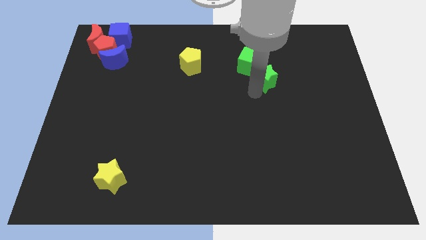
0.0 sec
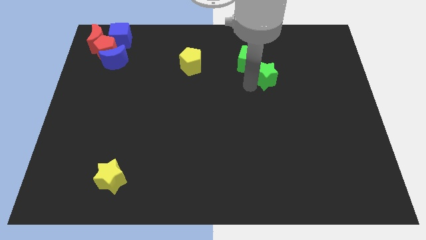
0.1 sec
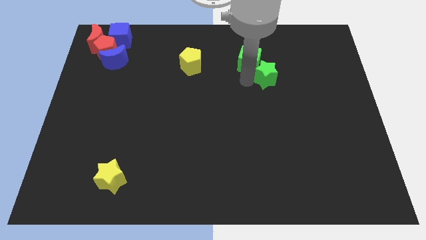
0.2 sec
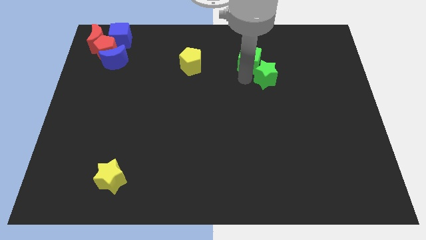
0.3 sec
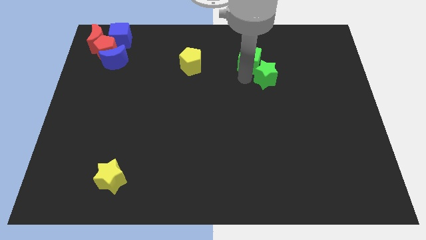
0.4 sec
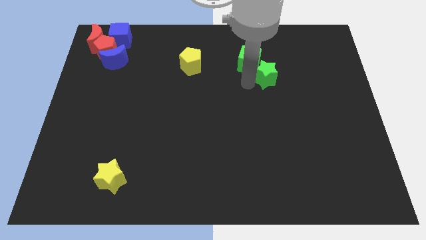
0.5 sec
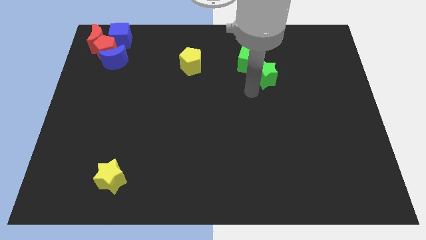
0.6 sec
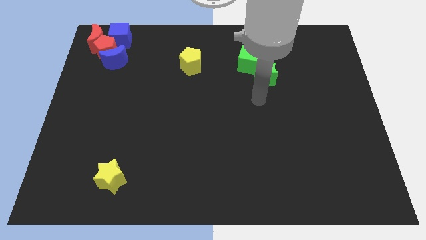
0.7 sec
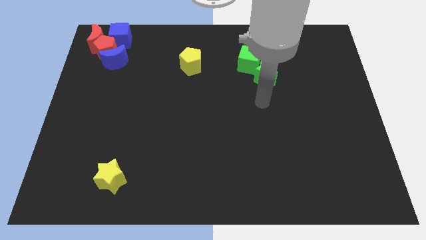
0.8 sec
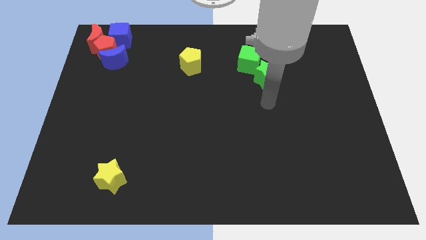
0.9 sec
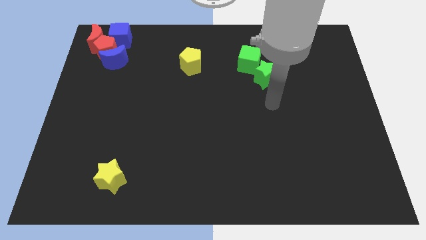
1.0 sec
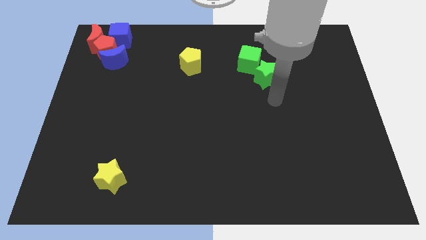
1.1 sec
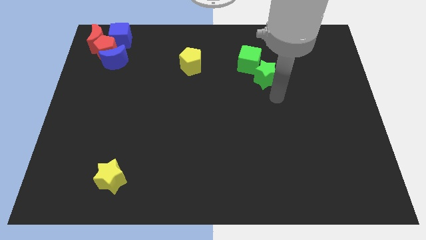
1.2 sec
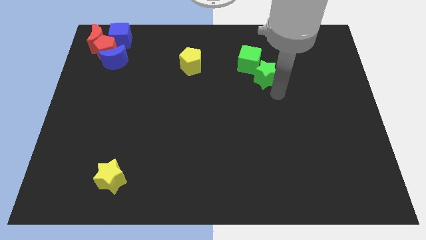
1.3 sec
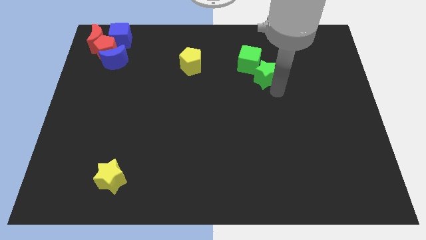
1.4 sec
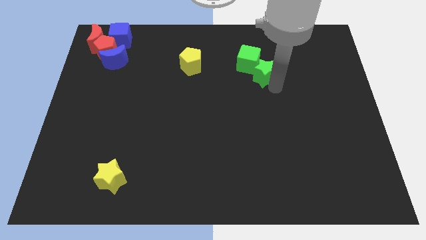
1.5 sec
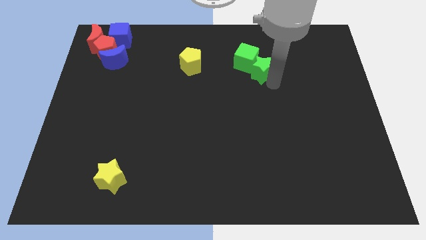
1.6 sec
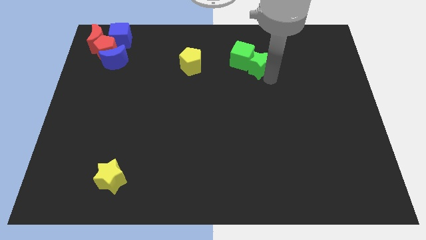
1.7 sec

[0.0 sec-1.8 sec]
push the green star in to the green cube

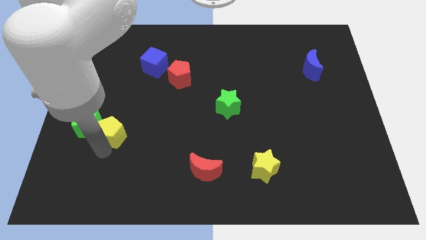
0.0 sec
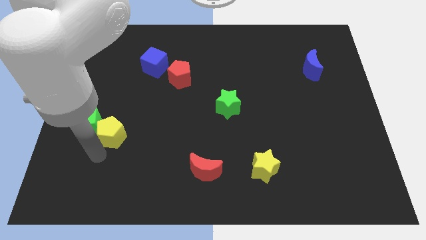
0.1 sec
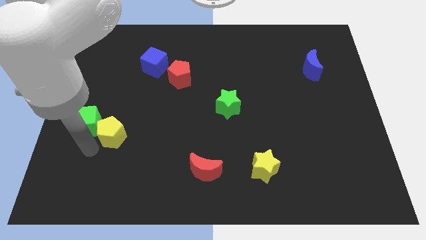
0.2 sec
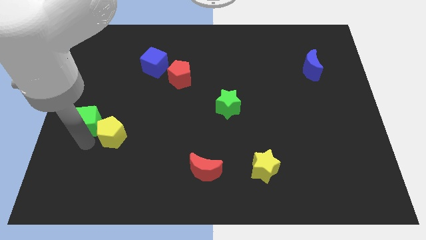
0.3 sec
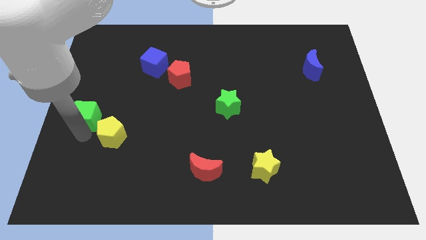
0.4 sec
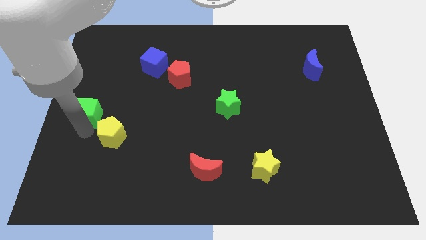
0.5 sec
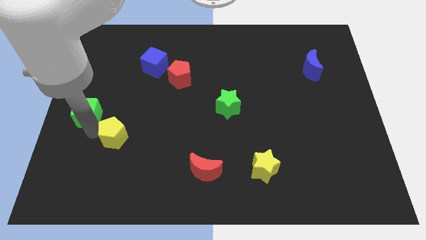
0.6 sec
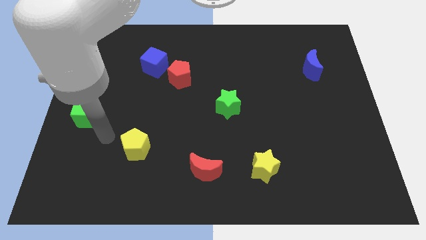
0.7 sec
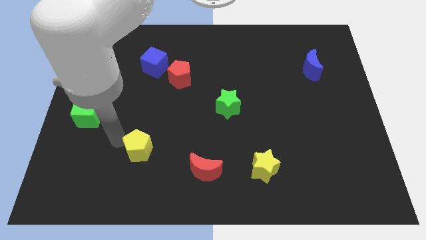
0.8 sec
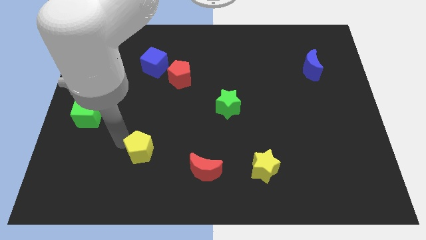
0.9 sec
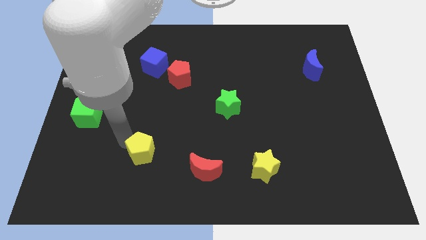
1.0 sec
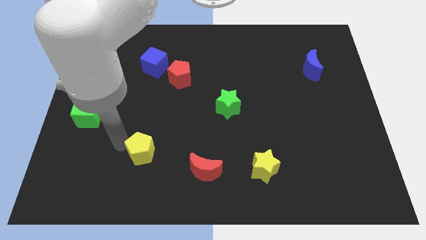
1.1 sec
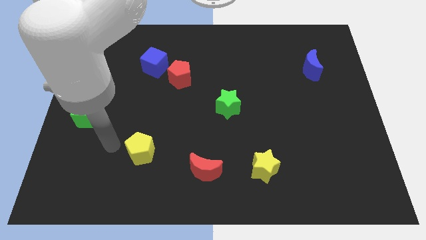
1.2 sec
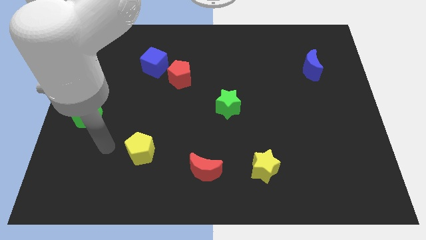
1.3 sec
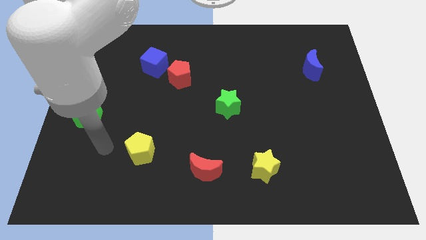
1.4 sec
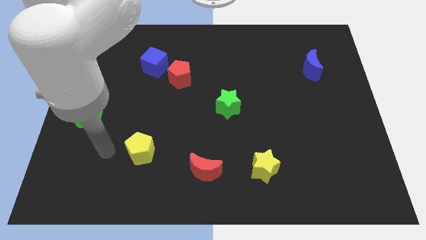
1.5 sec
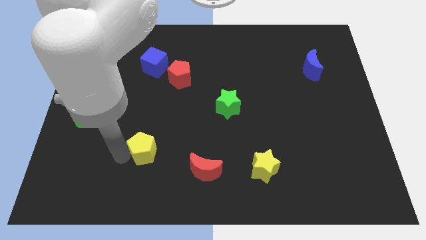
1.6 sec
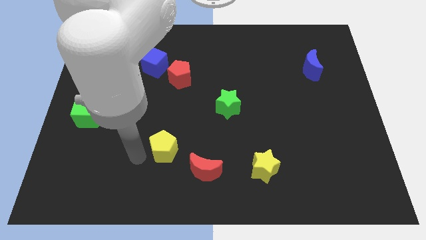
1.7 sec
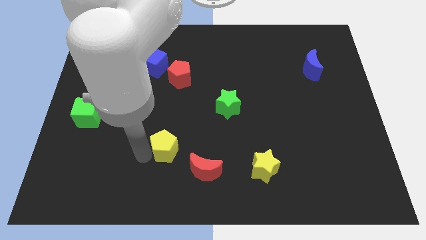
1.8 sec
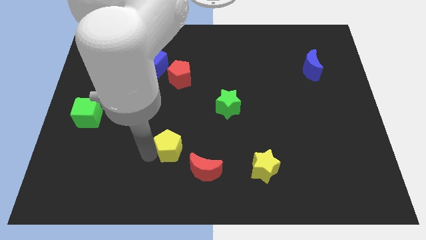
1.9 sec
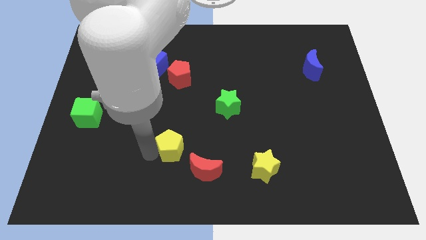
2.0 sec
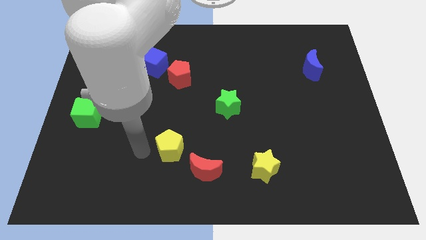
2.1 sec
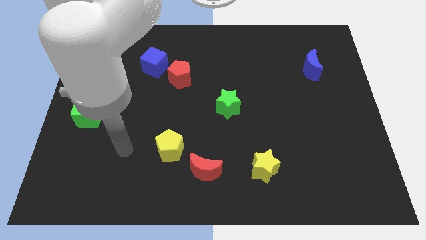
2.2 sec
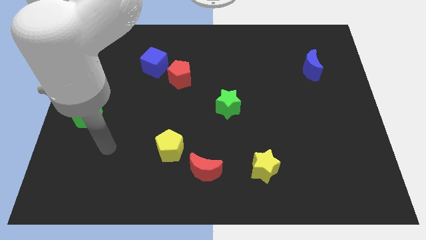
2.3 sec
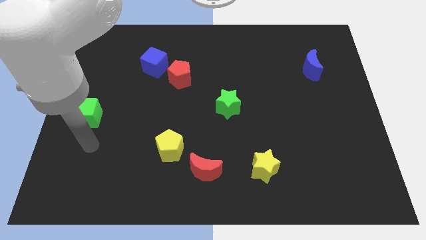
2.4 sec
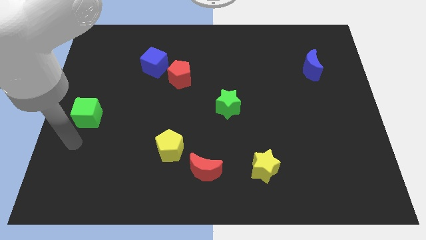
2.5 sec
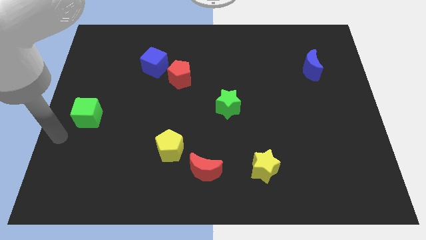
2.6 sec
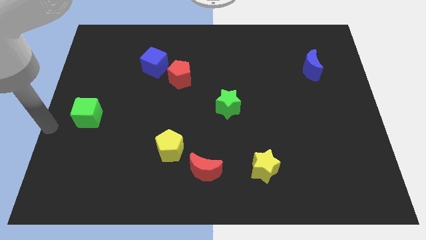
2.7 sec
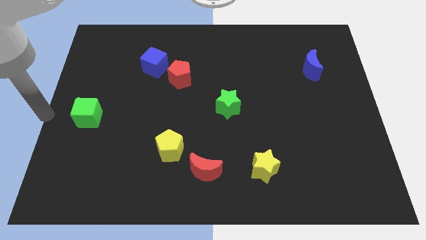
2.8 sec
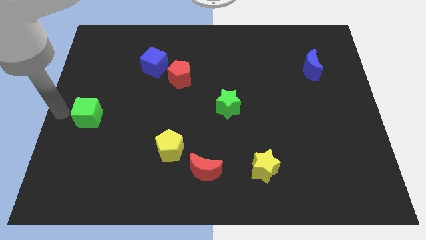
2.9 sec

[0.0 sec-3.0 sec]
place the yellow pentagon diagonally top left to red moon

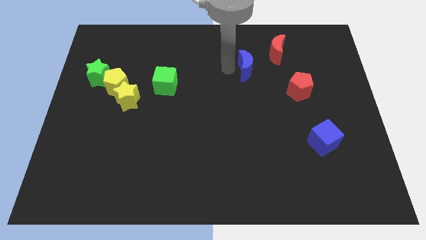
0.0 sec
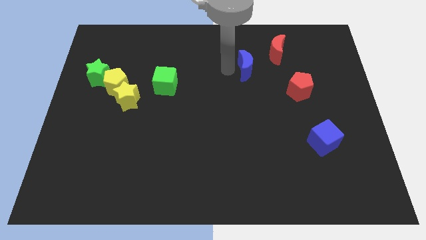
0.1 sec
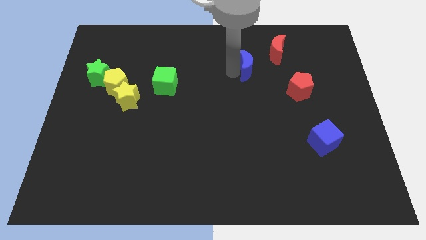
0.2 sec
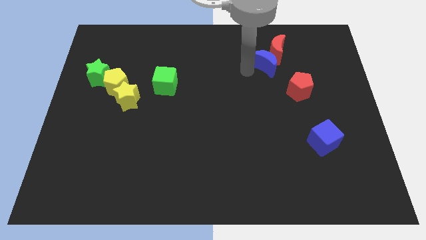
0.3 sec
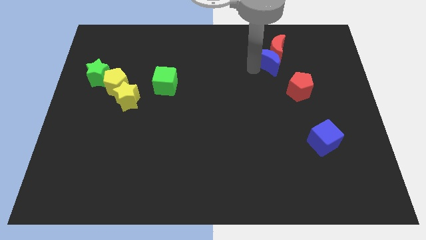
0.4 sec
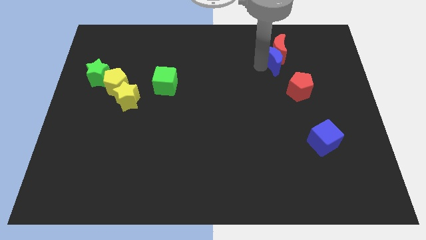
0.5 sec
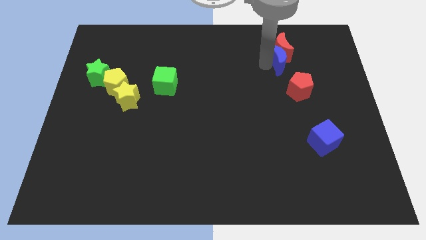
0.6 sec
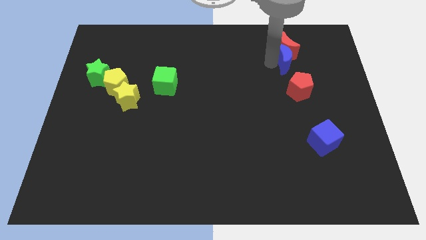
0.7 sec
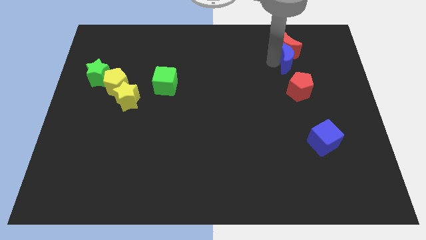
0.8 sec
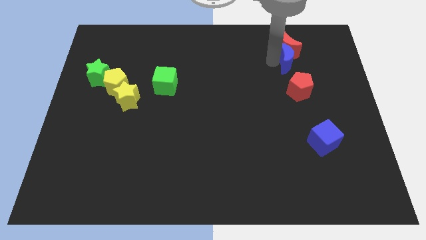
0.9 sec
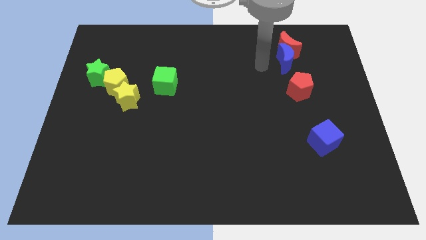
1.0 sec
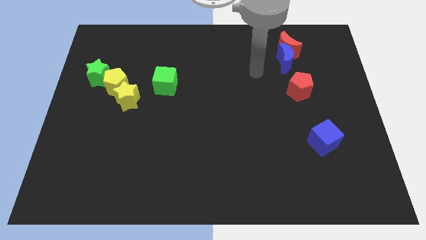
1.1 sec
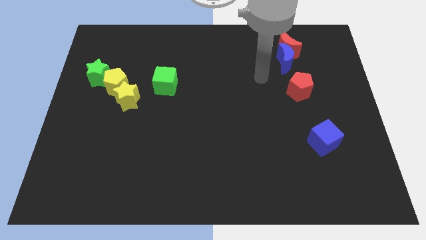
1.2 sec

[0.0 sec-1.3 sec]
push the blue crescent to the bottom of the red crescent

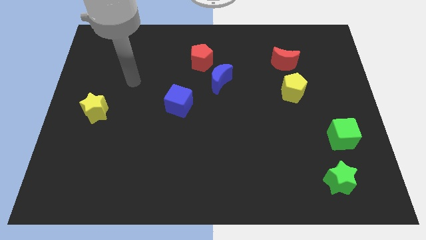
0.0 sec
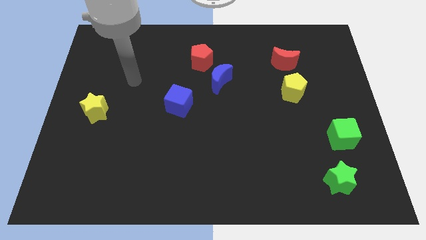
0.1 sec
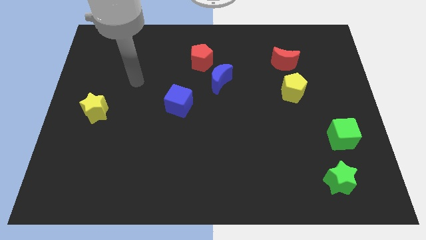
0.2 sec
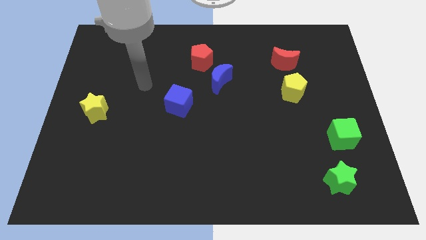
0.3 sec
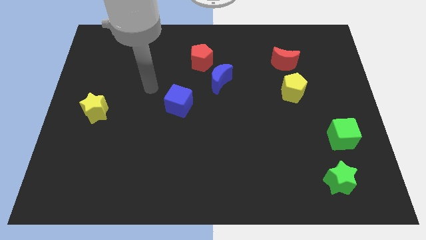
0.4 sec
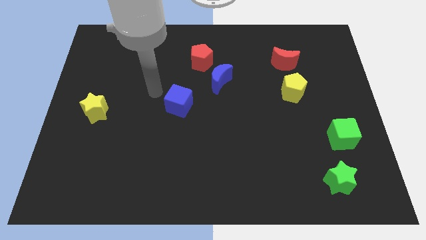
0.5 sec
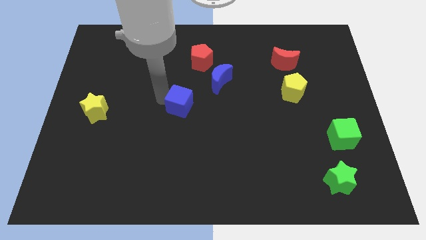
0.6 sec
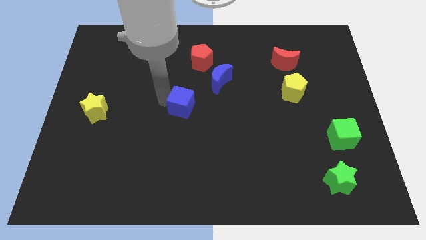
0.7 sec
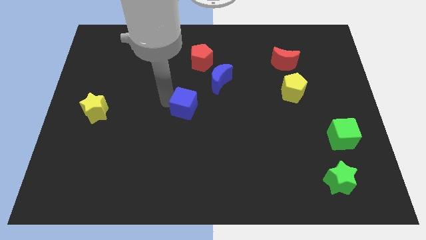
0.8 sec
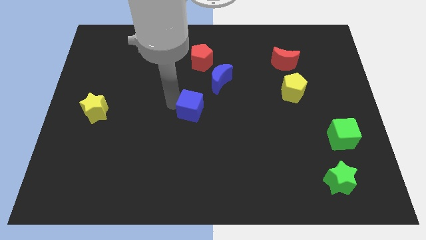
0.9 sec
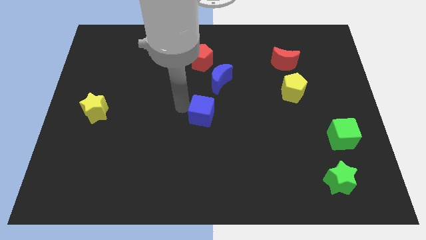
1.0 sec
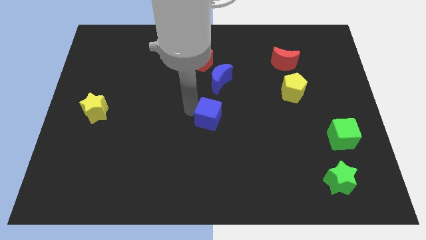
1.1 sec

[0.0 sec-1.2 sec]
place the blue cube at center of the board

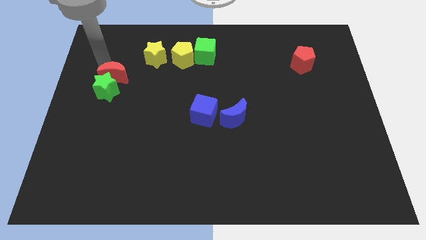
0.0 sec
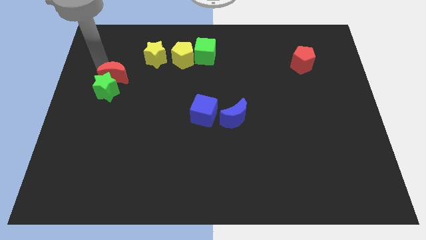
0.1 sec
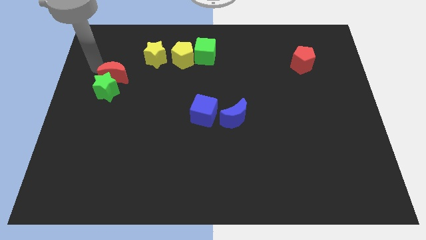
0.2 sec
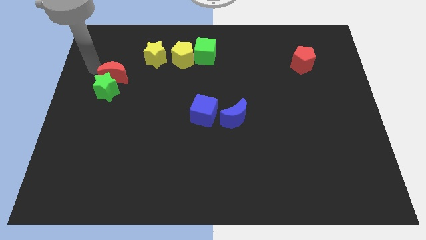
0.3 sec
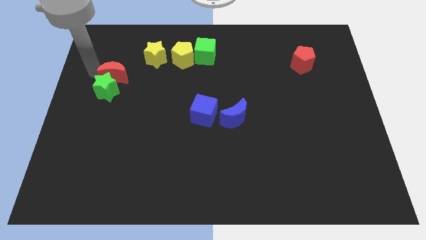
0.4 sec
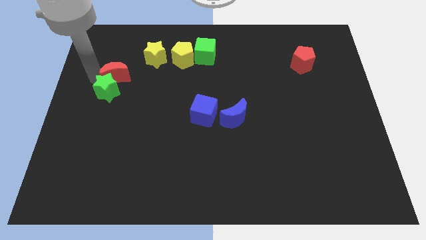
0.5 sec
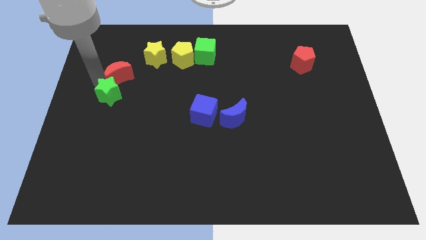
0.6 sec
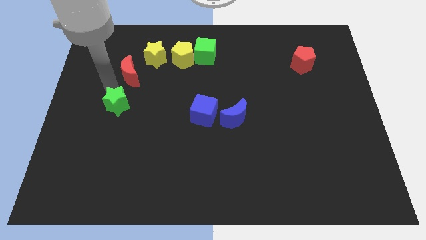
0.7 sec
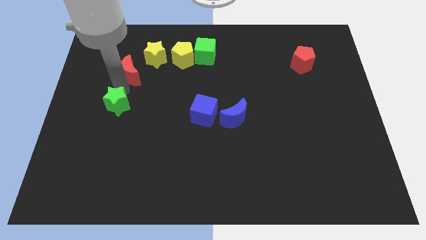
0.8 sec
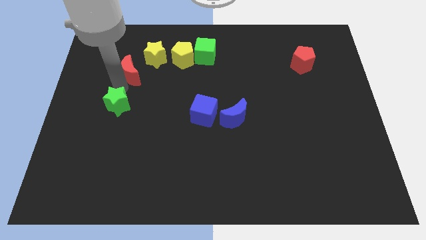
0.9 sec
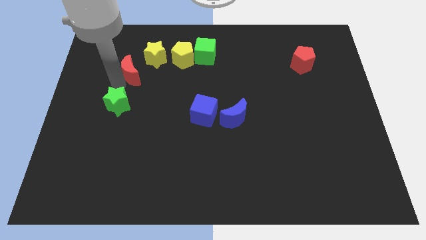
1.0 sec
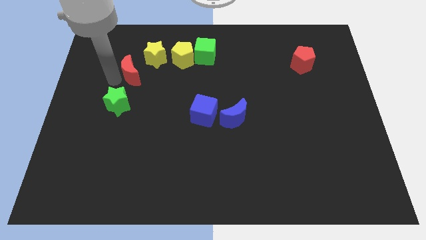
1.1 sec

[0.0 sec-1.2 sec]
separate green star from red moon

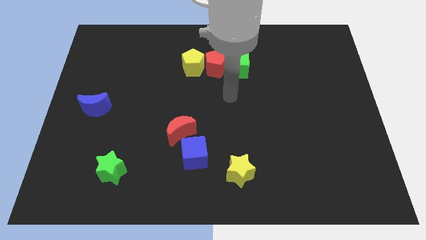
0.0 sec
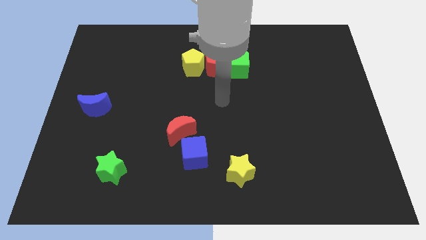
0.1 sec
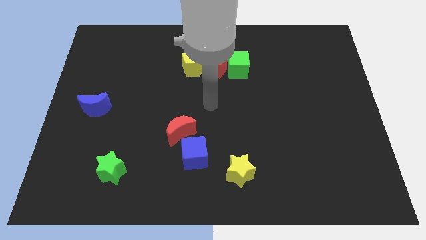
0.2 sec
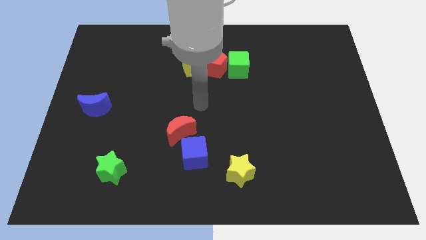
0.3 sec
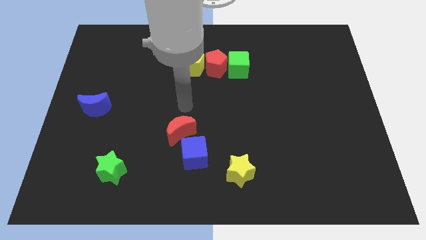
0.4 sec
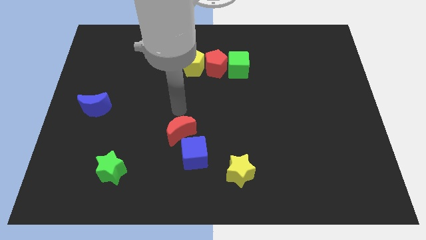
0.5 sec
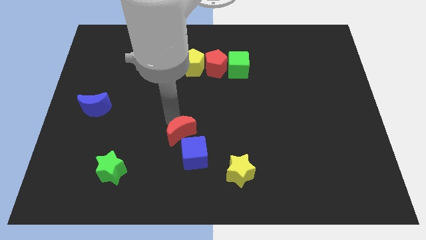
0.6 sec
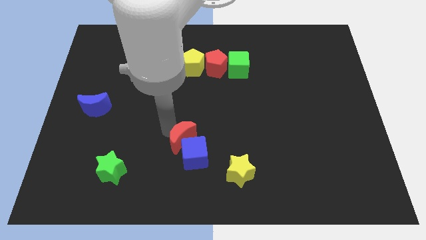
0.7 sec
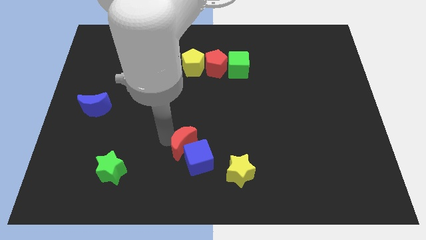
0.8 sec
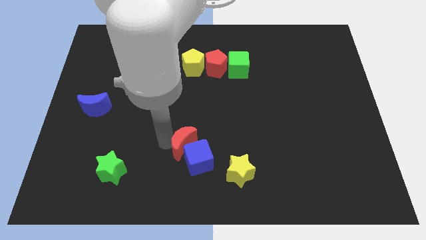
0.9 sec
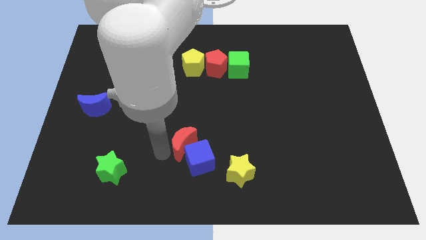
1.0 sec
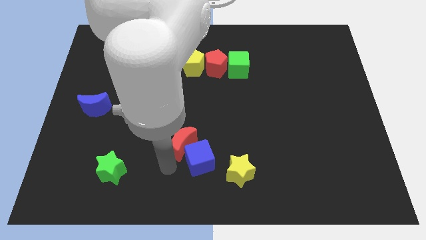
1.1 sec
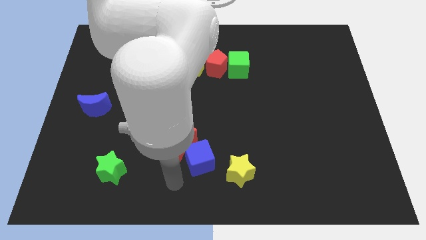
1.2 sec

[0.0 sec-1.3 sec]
push the red crescent into the blue cube
